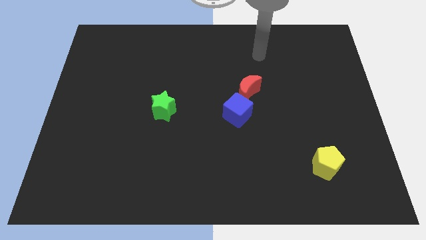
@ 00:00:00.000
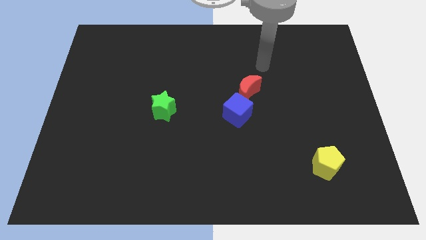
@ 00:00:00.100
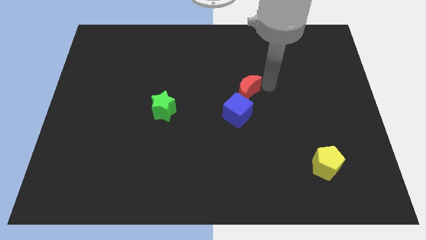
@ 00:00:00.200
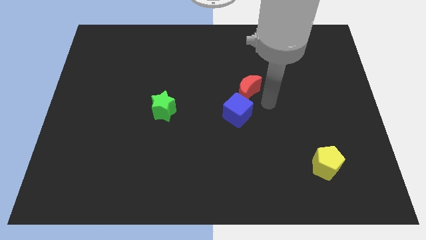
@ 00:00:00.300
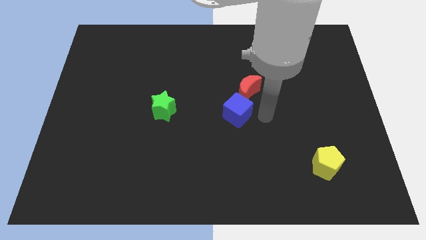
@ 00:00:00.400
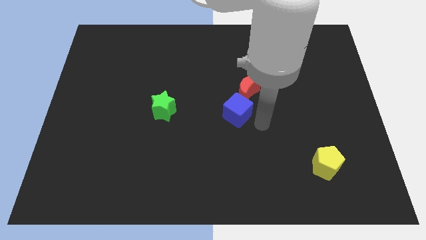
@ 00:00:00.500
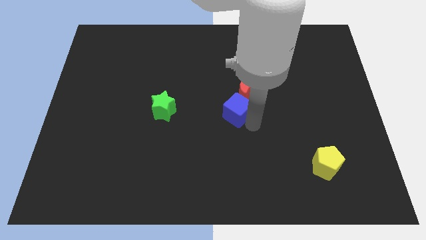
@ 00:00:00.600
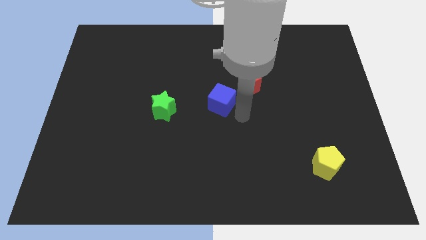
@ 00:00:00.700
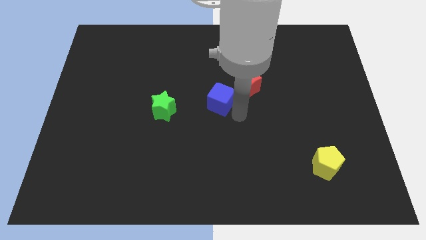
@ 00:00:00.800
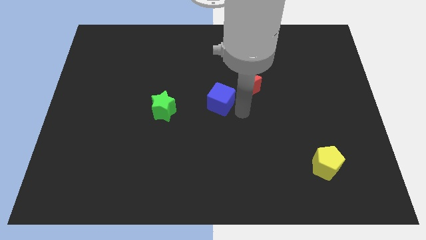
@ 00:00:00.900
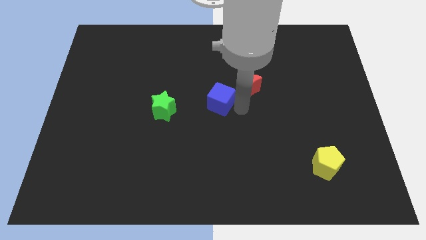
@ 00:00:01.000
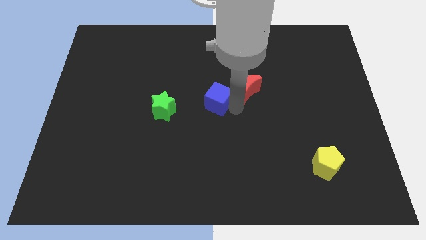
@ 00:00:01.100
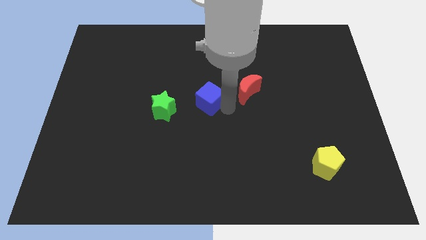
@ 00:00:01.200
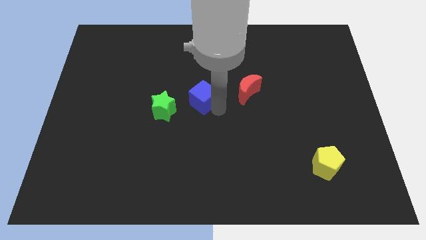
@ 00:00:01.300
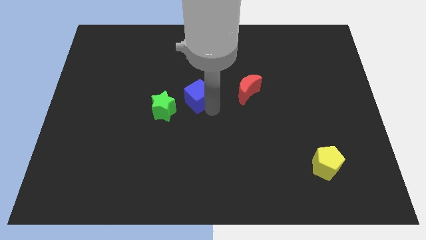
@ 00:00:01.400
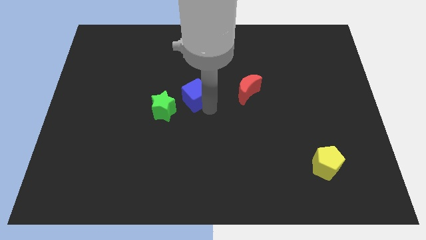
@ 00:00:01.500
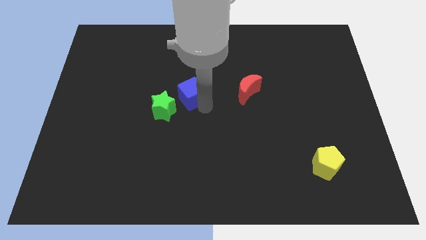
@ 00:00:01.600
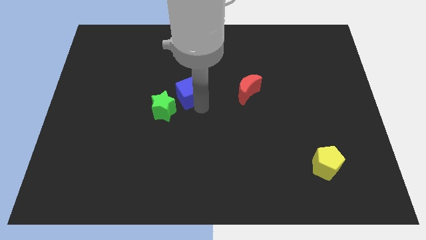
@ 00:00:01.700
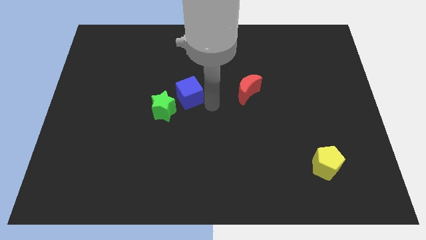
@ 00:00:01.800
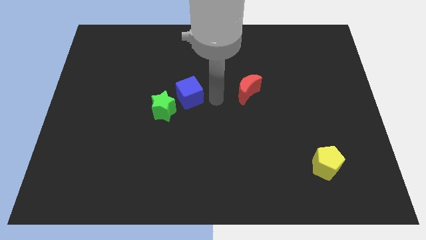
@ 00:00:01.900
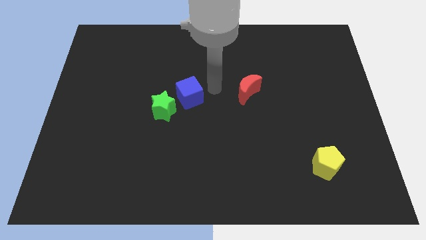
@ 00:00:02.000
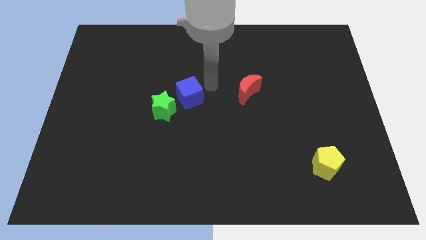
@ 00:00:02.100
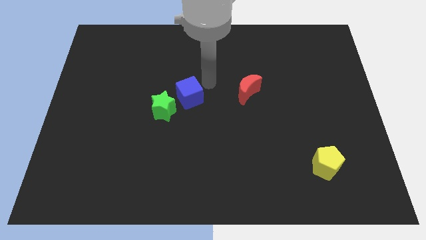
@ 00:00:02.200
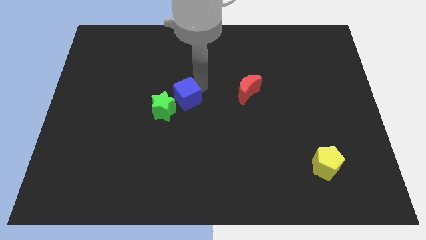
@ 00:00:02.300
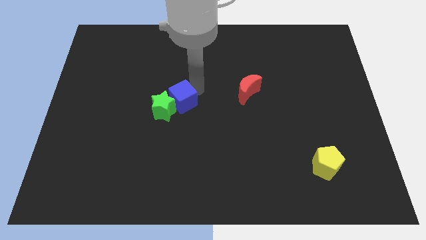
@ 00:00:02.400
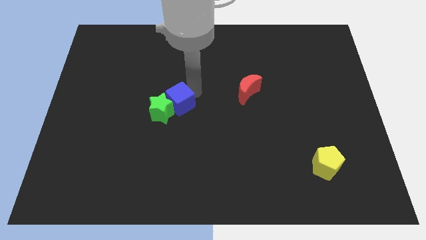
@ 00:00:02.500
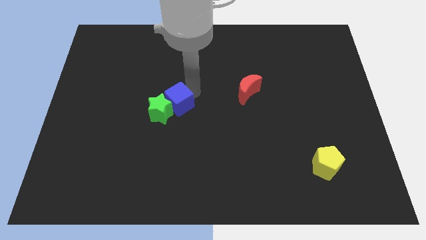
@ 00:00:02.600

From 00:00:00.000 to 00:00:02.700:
put the blue cube next to the star

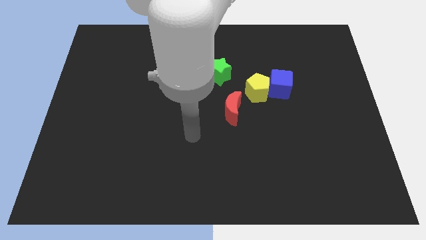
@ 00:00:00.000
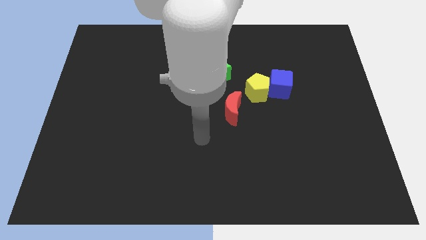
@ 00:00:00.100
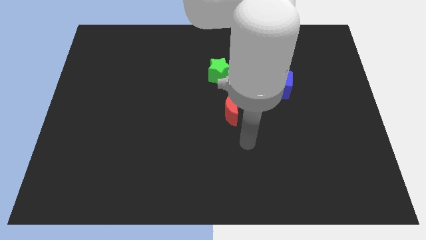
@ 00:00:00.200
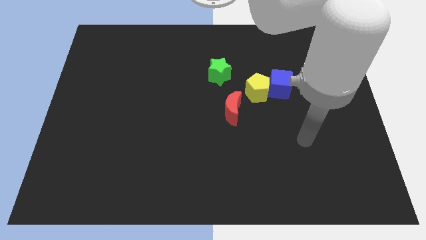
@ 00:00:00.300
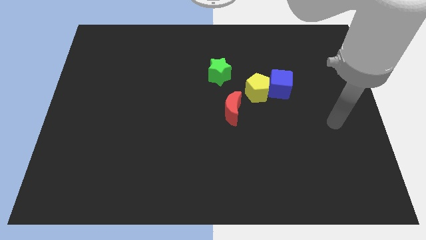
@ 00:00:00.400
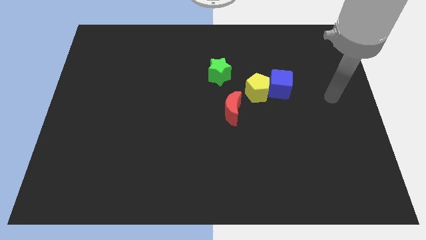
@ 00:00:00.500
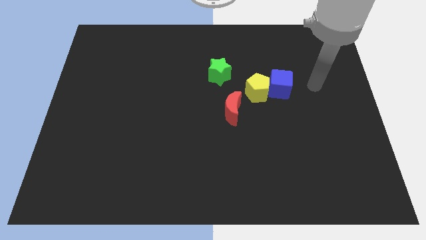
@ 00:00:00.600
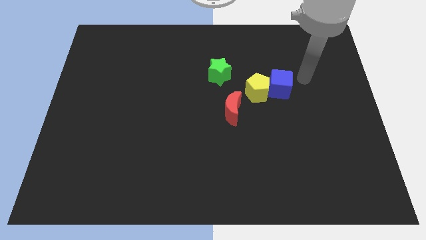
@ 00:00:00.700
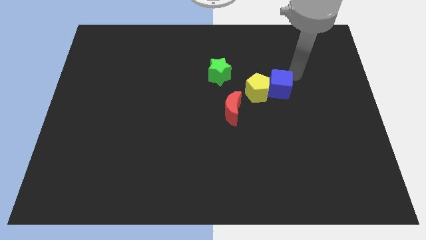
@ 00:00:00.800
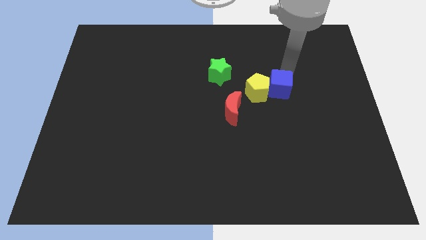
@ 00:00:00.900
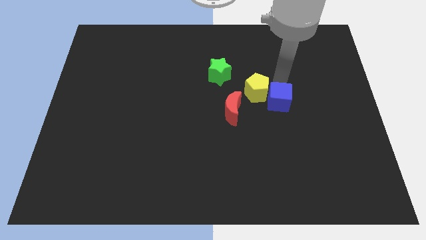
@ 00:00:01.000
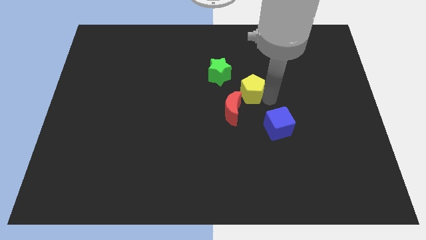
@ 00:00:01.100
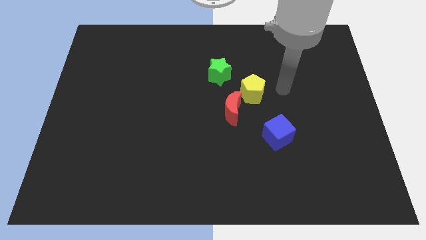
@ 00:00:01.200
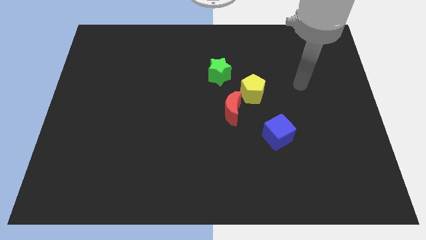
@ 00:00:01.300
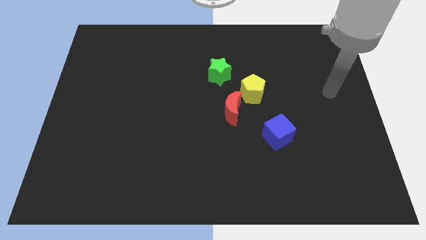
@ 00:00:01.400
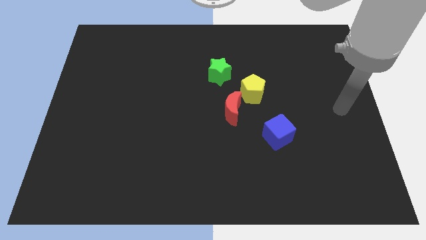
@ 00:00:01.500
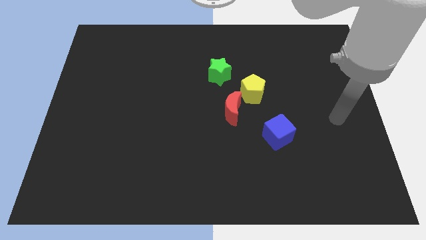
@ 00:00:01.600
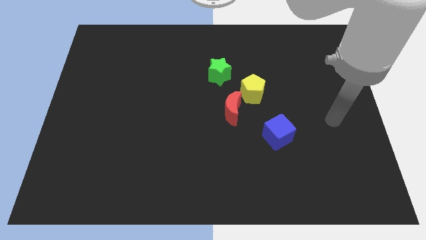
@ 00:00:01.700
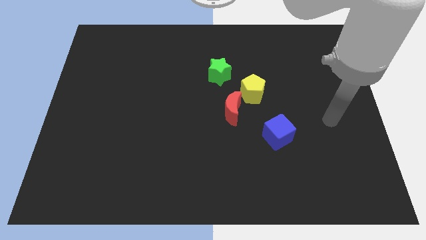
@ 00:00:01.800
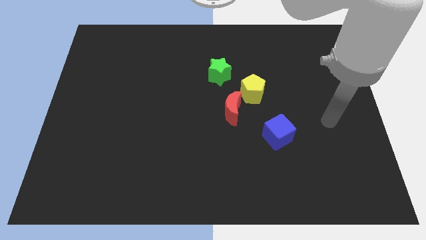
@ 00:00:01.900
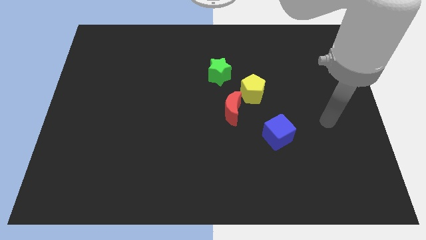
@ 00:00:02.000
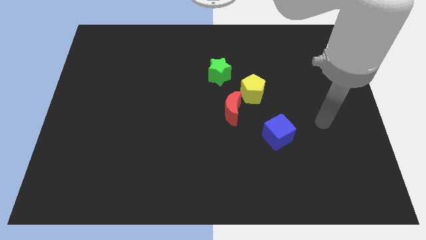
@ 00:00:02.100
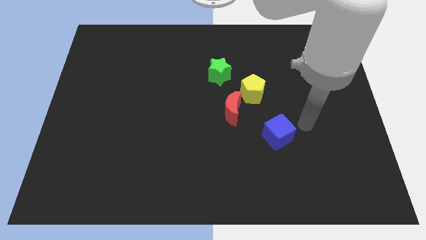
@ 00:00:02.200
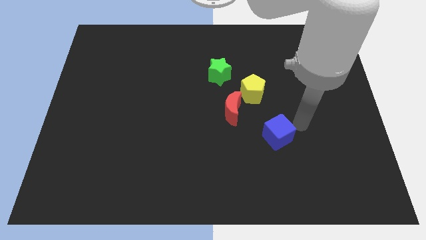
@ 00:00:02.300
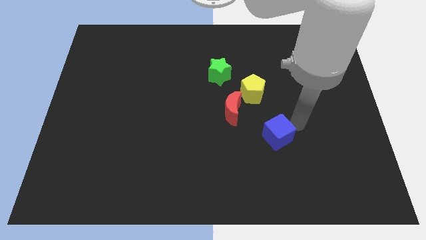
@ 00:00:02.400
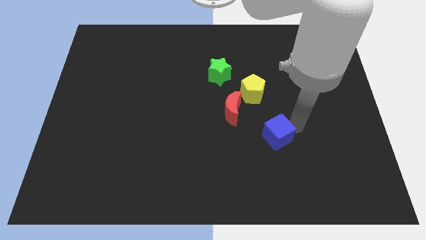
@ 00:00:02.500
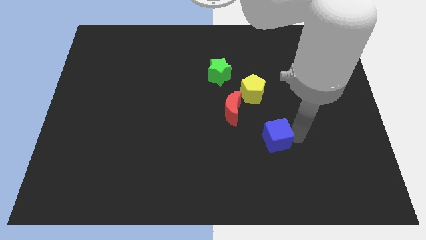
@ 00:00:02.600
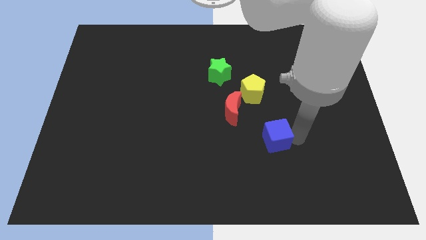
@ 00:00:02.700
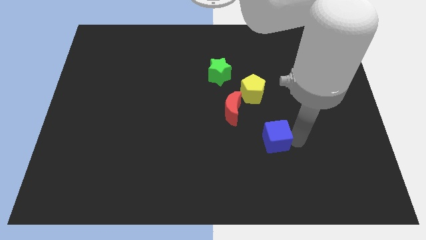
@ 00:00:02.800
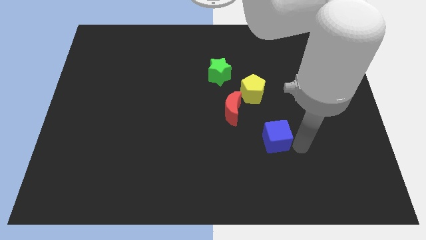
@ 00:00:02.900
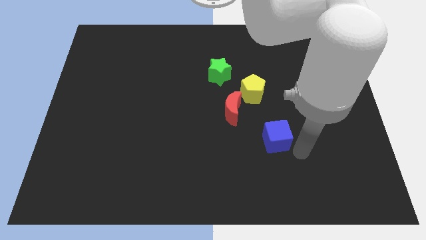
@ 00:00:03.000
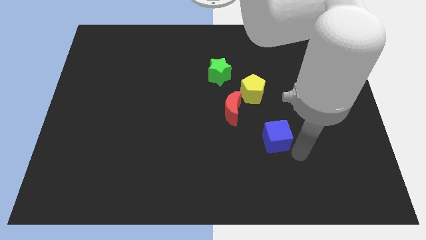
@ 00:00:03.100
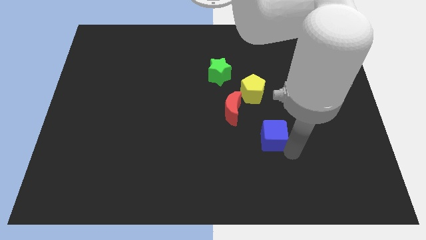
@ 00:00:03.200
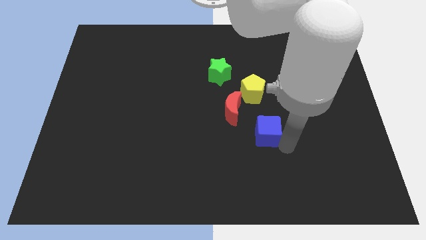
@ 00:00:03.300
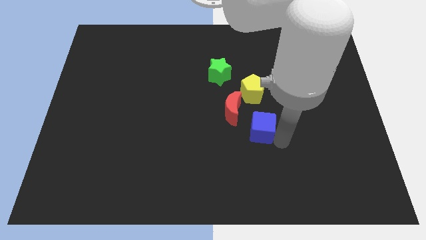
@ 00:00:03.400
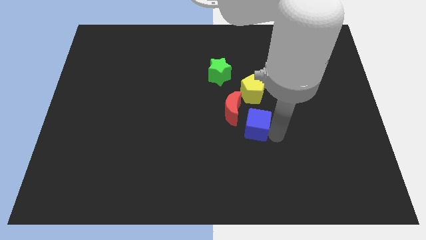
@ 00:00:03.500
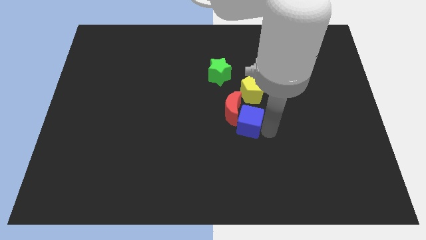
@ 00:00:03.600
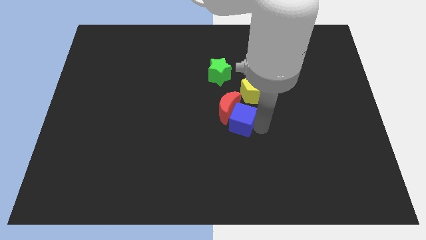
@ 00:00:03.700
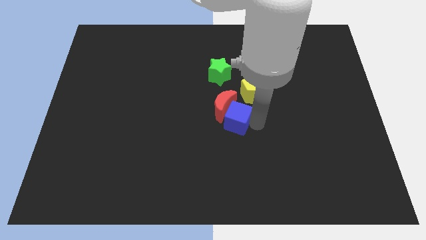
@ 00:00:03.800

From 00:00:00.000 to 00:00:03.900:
slide the blue cube next to the red block

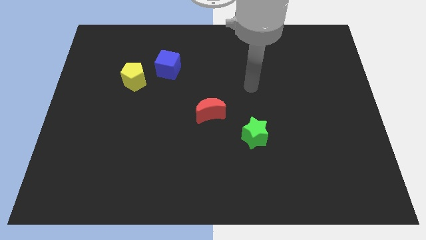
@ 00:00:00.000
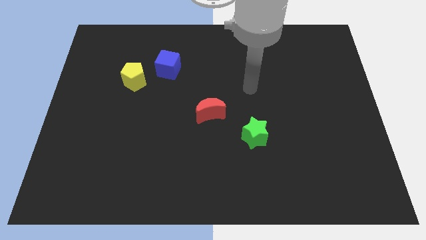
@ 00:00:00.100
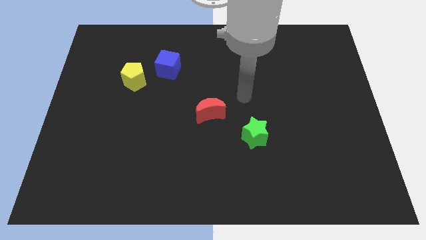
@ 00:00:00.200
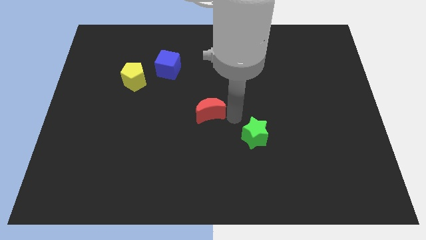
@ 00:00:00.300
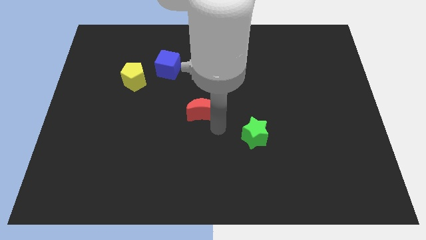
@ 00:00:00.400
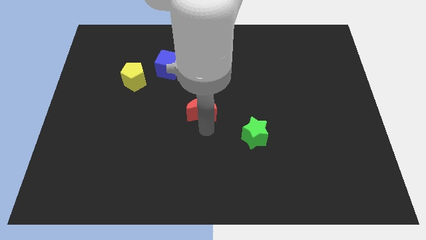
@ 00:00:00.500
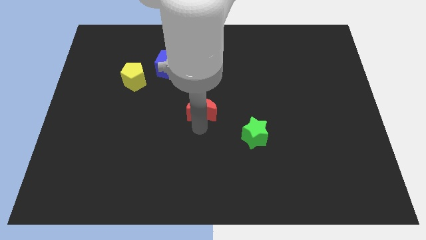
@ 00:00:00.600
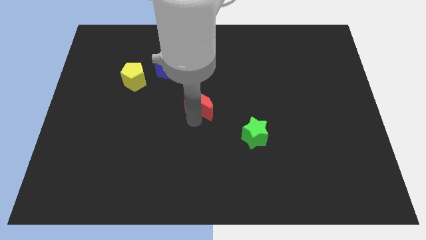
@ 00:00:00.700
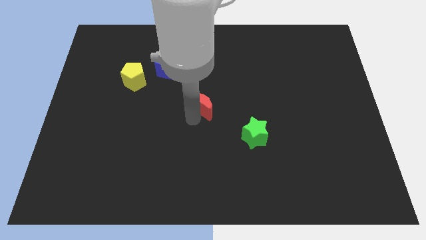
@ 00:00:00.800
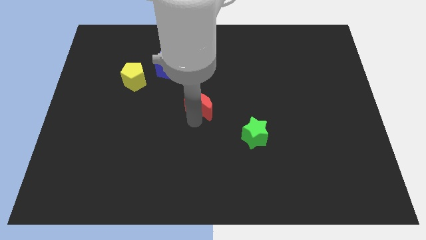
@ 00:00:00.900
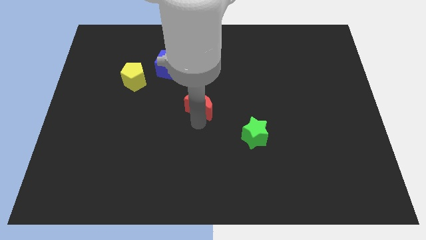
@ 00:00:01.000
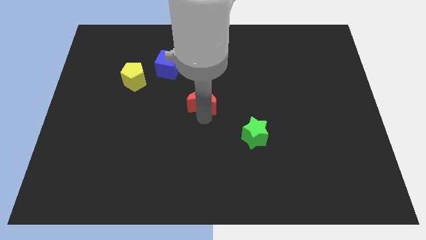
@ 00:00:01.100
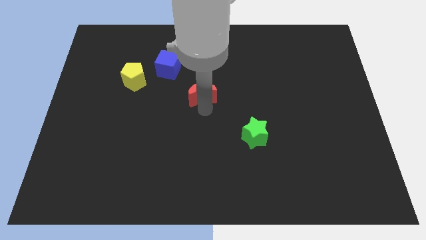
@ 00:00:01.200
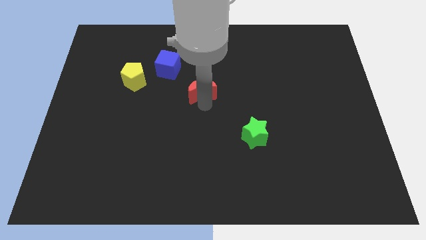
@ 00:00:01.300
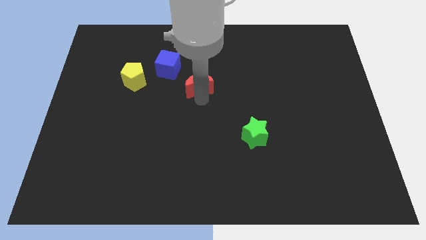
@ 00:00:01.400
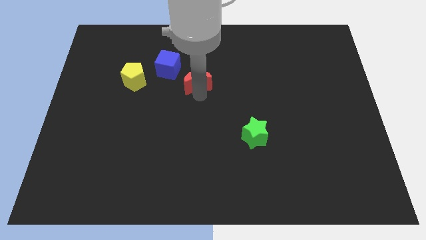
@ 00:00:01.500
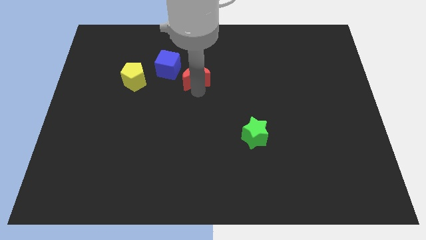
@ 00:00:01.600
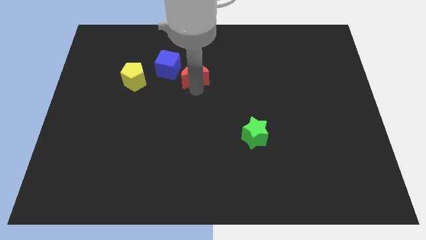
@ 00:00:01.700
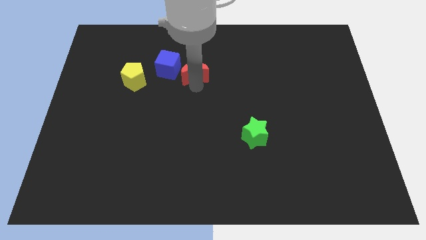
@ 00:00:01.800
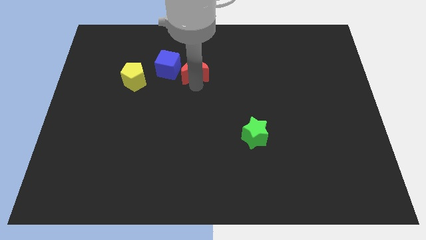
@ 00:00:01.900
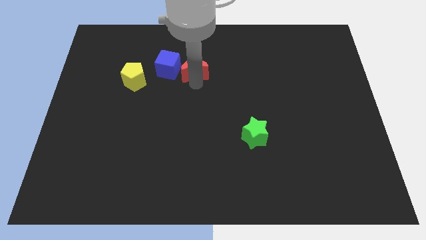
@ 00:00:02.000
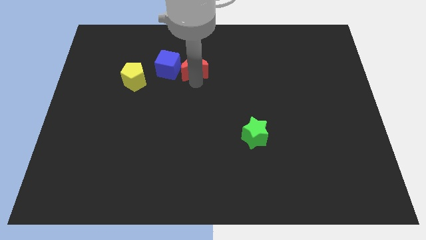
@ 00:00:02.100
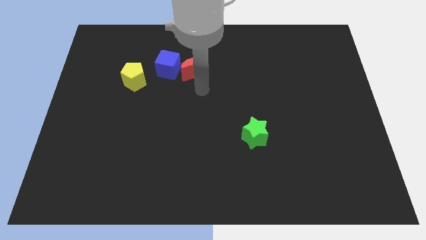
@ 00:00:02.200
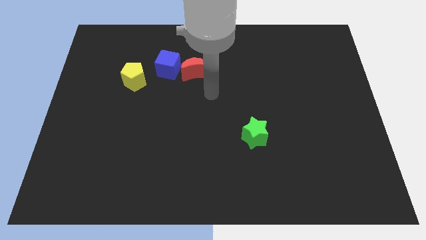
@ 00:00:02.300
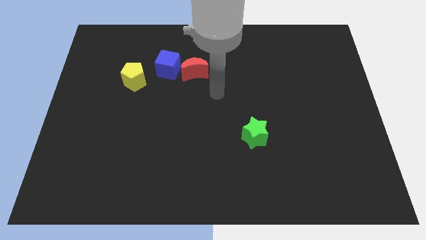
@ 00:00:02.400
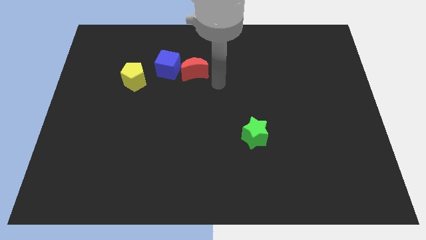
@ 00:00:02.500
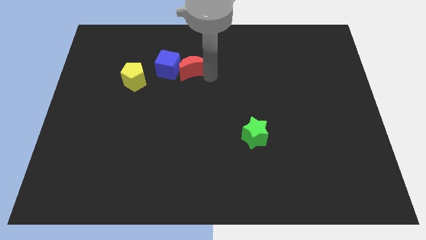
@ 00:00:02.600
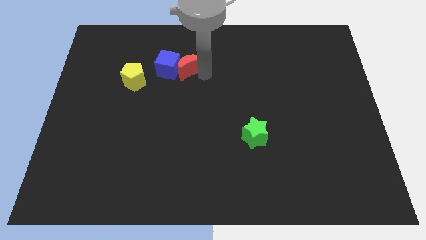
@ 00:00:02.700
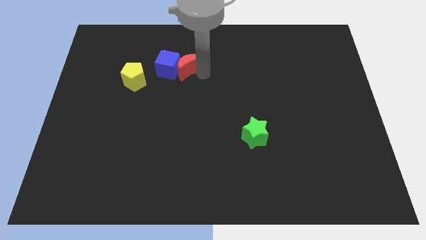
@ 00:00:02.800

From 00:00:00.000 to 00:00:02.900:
move the red block to the cube
